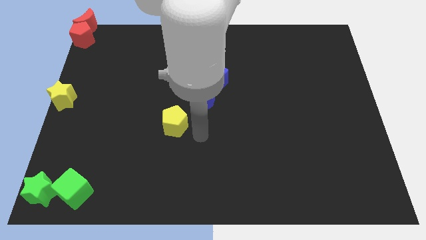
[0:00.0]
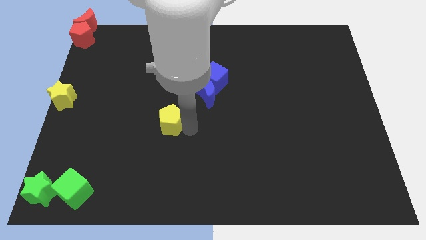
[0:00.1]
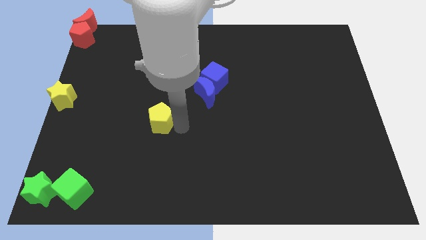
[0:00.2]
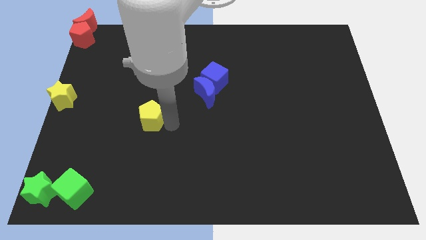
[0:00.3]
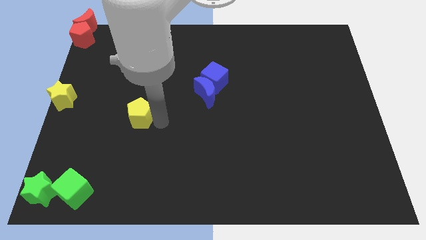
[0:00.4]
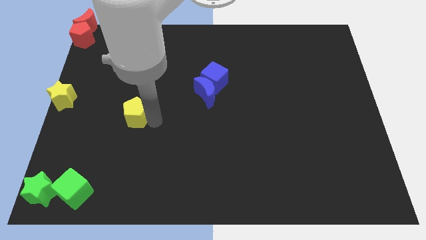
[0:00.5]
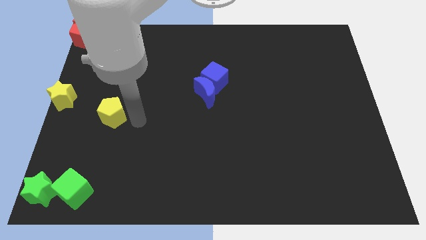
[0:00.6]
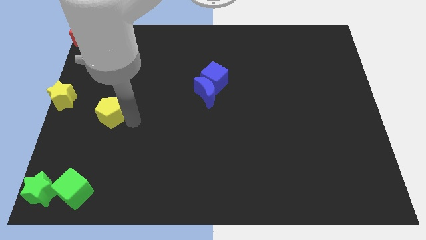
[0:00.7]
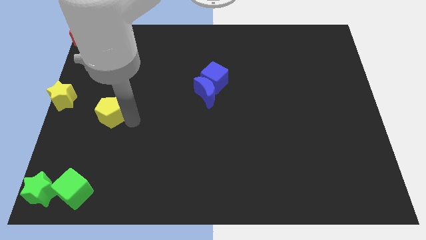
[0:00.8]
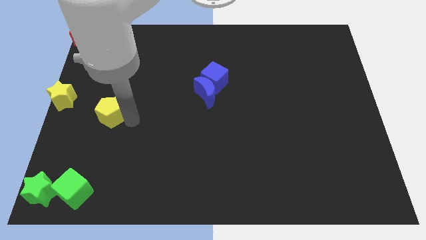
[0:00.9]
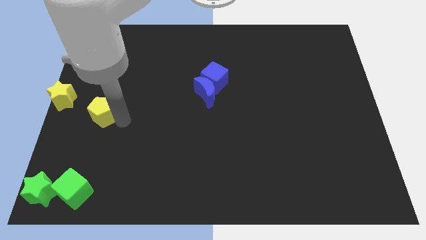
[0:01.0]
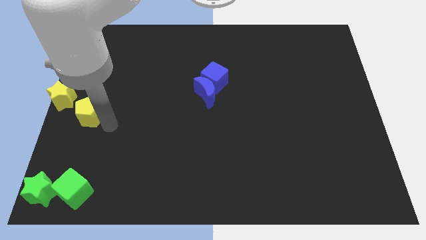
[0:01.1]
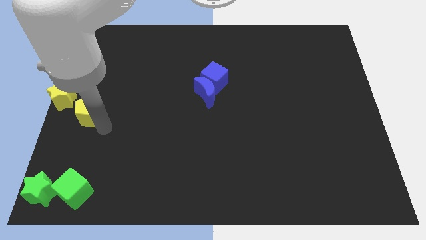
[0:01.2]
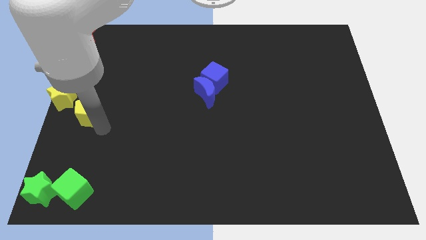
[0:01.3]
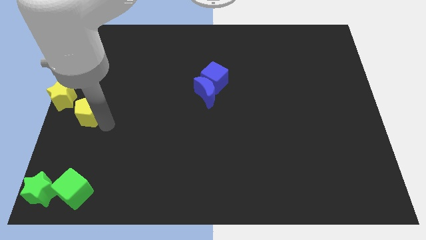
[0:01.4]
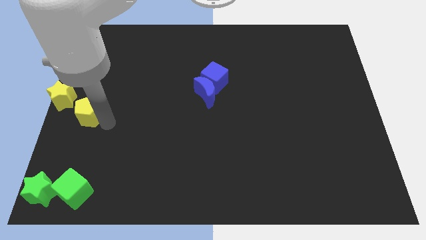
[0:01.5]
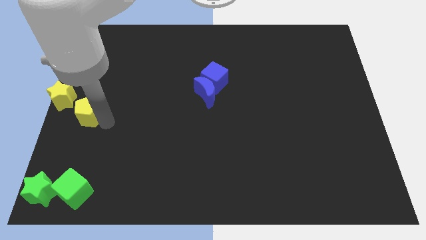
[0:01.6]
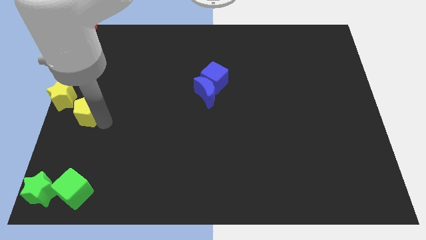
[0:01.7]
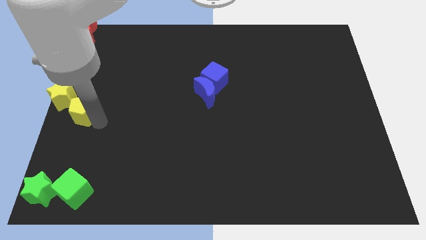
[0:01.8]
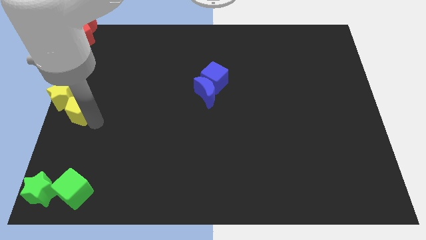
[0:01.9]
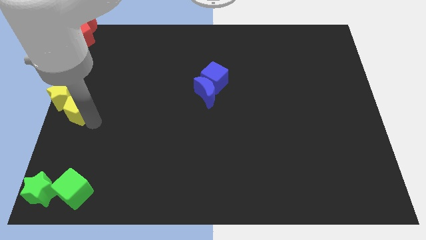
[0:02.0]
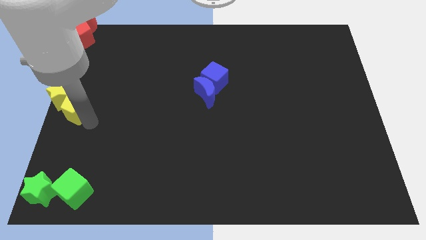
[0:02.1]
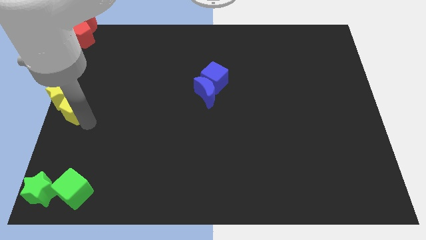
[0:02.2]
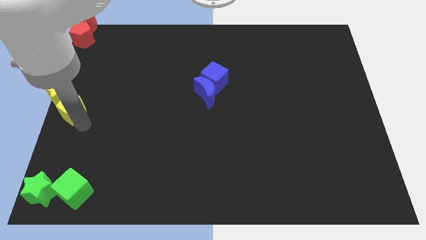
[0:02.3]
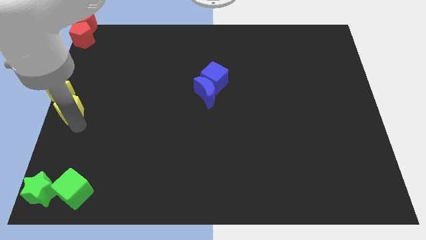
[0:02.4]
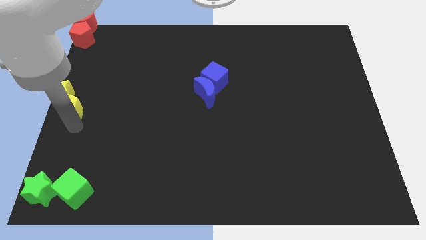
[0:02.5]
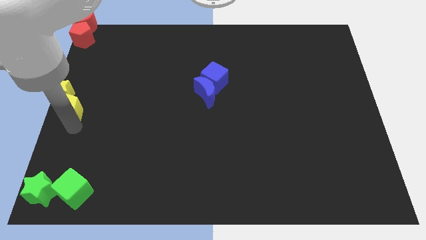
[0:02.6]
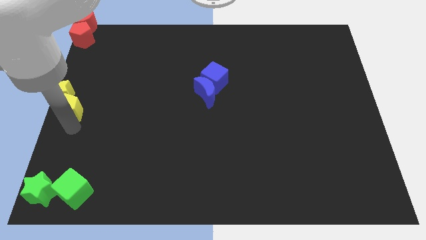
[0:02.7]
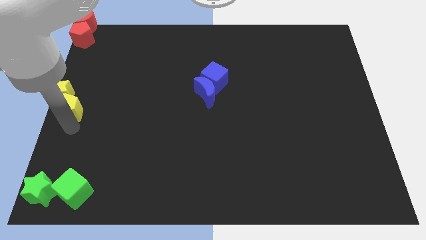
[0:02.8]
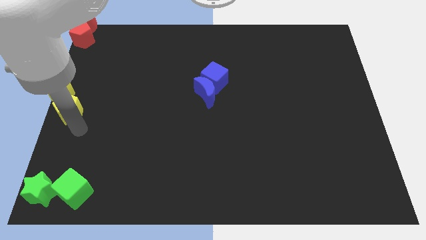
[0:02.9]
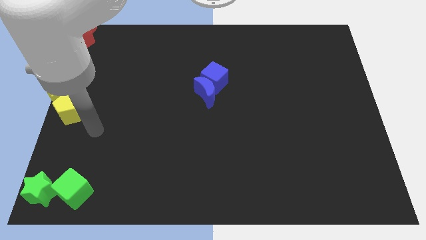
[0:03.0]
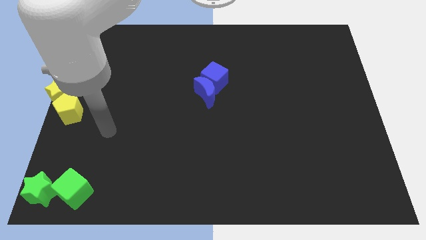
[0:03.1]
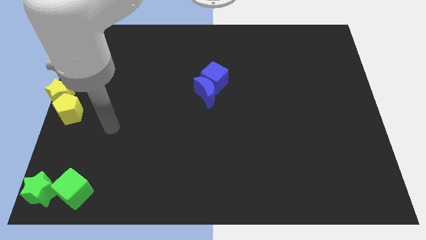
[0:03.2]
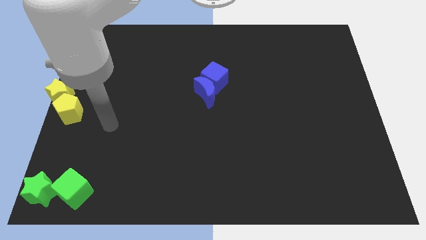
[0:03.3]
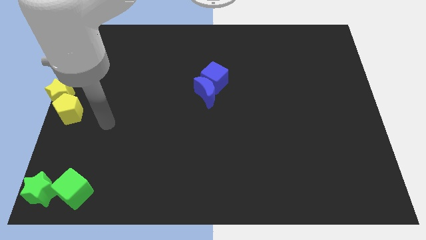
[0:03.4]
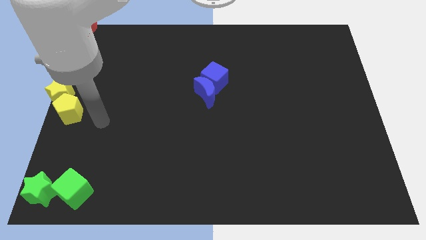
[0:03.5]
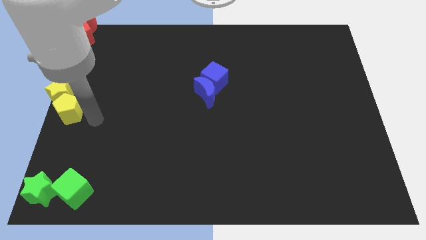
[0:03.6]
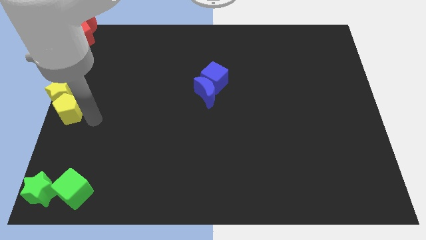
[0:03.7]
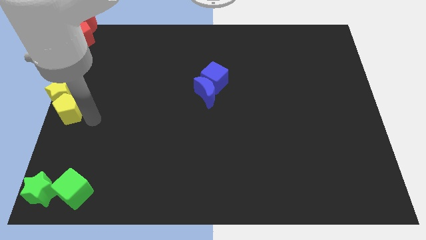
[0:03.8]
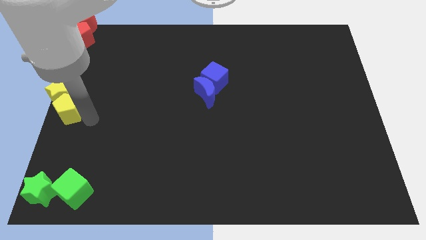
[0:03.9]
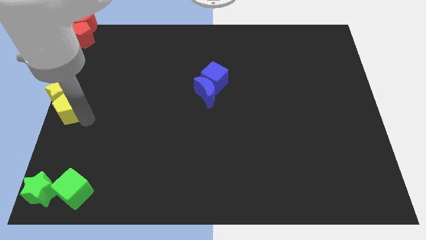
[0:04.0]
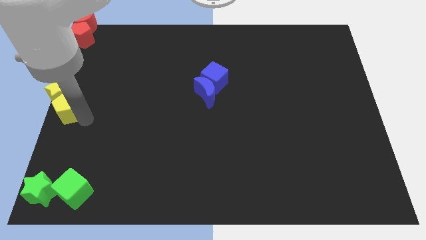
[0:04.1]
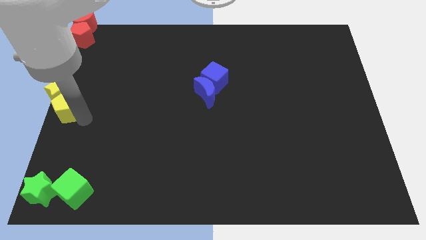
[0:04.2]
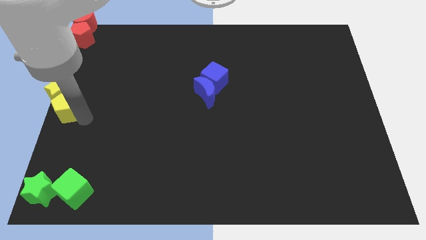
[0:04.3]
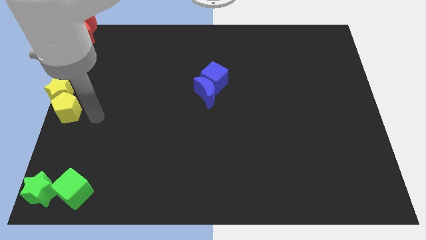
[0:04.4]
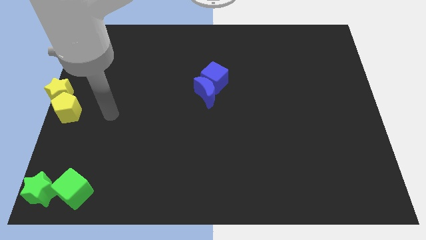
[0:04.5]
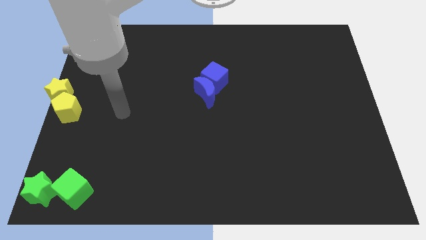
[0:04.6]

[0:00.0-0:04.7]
slide the yellow pentagon into the bottom side of the yellow star

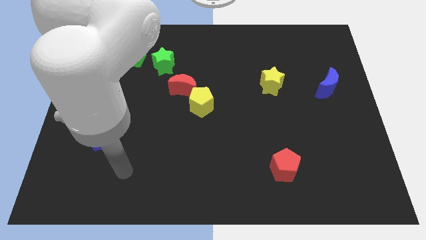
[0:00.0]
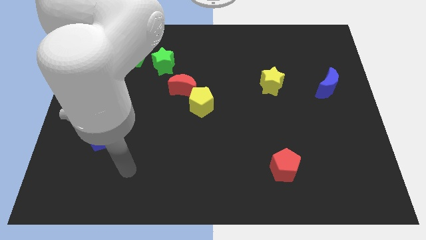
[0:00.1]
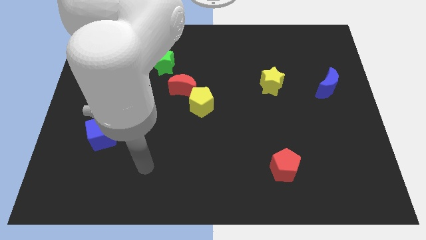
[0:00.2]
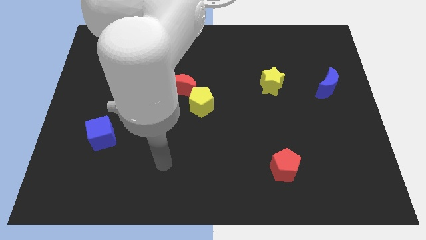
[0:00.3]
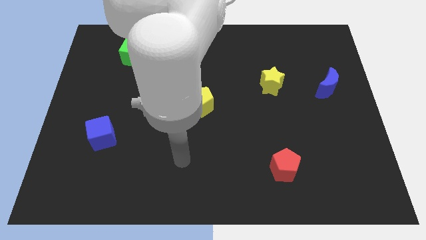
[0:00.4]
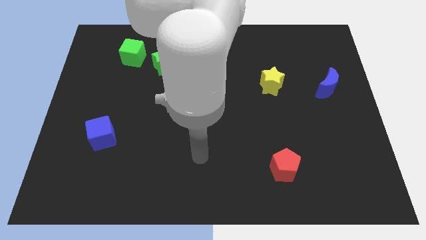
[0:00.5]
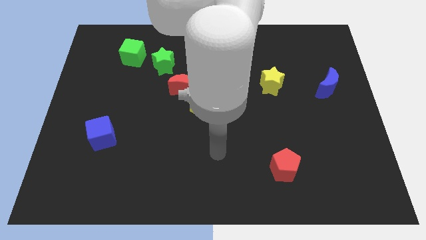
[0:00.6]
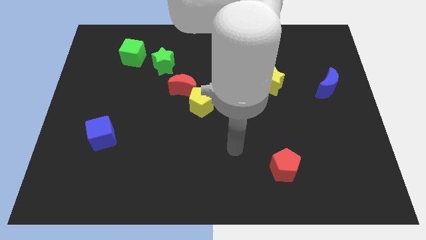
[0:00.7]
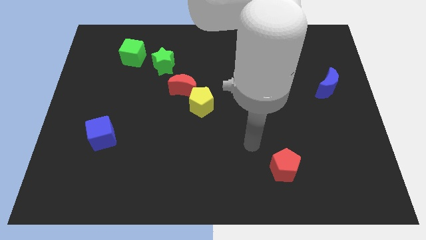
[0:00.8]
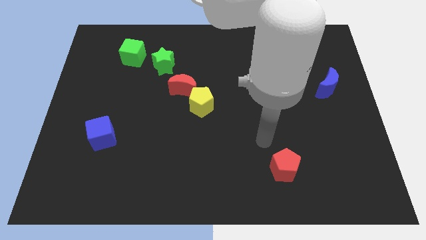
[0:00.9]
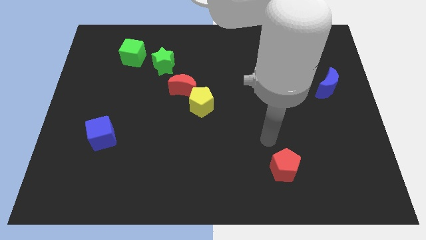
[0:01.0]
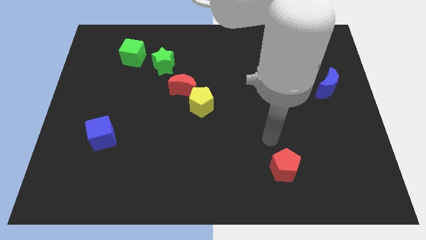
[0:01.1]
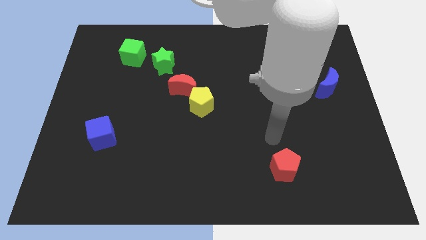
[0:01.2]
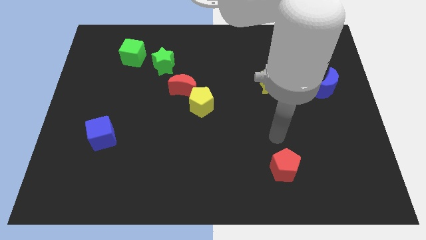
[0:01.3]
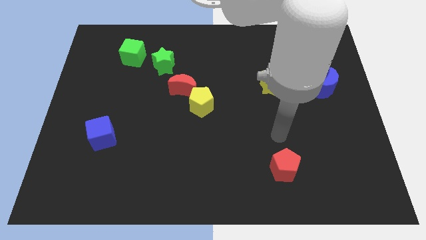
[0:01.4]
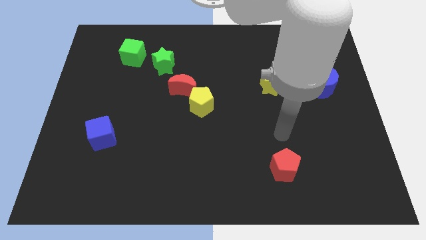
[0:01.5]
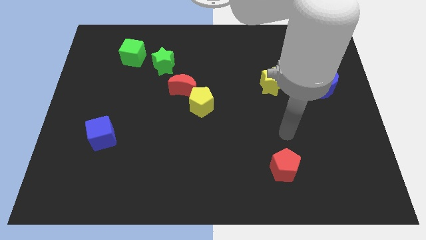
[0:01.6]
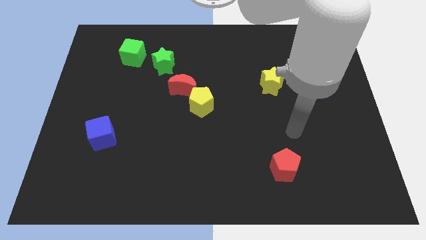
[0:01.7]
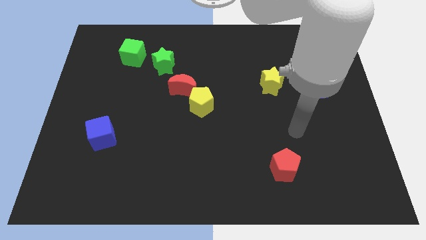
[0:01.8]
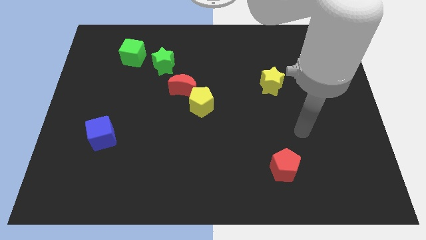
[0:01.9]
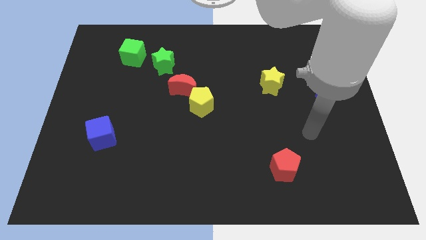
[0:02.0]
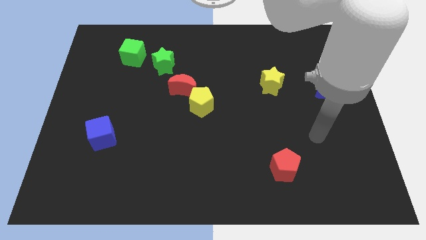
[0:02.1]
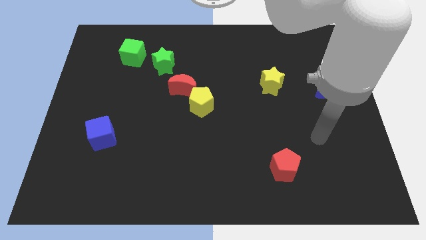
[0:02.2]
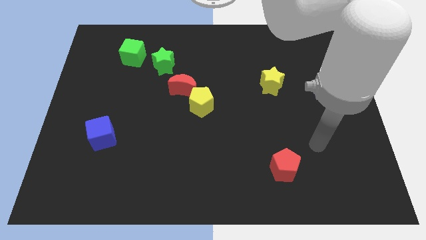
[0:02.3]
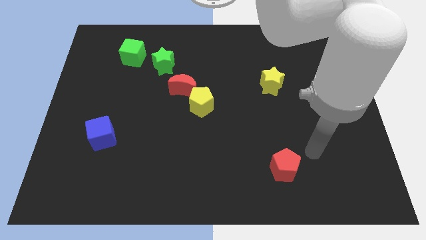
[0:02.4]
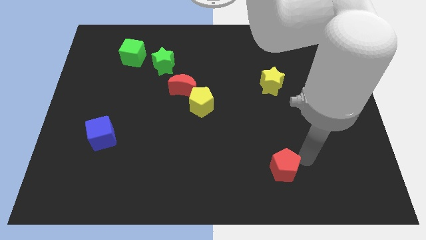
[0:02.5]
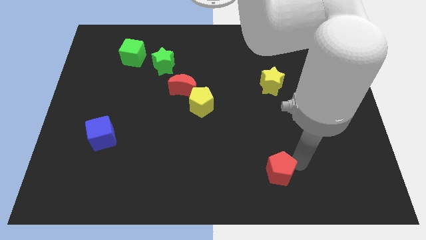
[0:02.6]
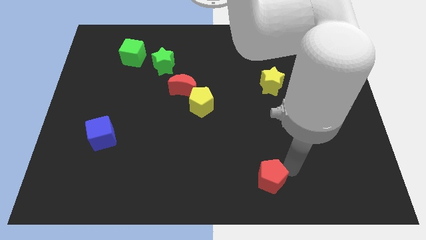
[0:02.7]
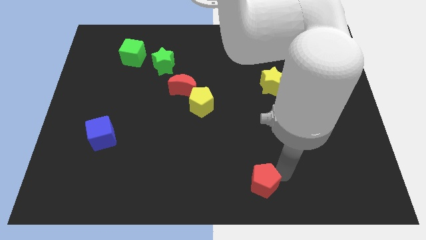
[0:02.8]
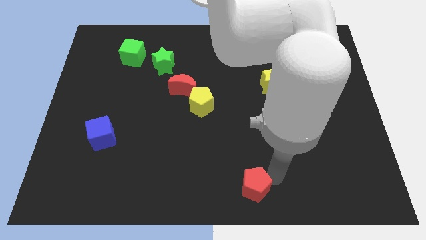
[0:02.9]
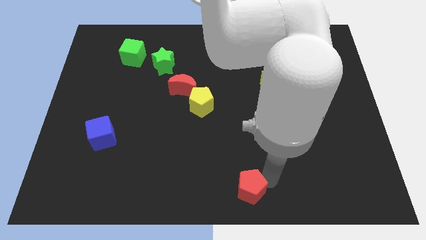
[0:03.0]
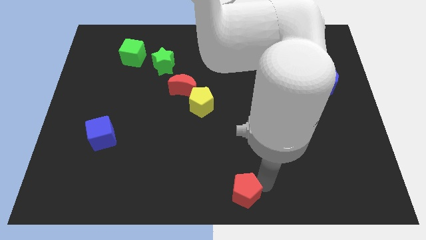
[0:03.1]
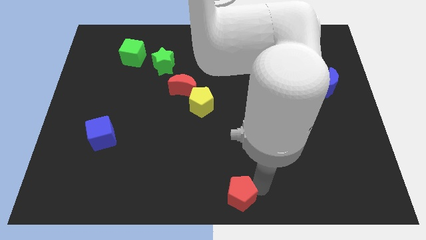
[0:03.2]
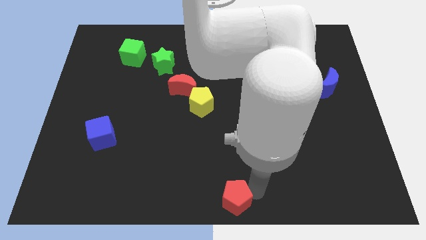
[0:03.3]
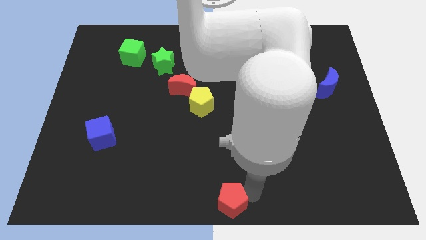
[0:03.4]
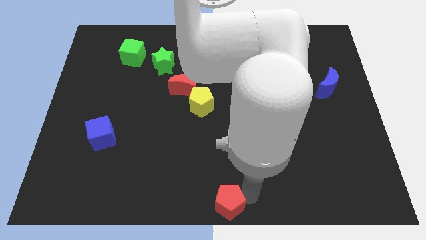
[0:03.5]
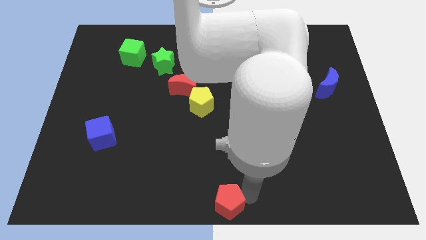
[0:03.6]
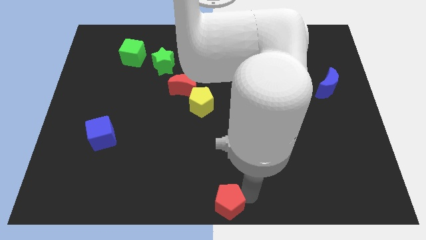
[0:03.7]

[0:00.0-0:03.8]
put the red pentagon at the bottom center of the board

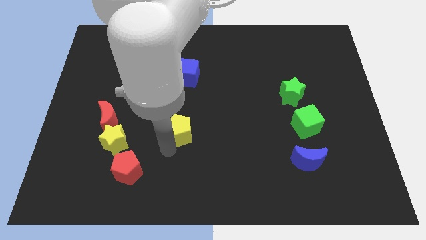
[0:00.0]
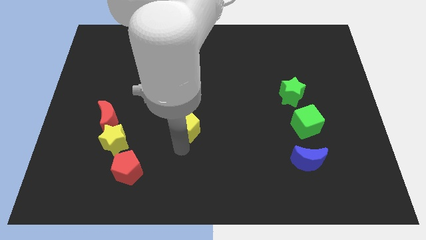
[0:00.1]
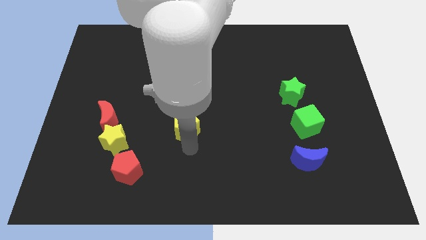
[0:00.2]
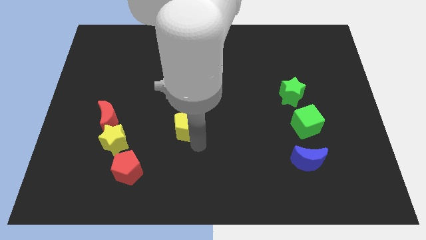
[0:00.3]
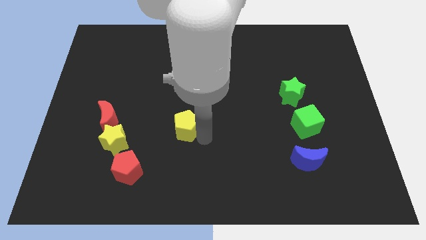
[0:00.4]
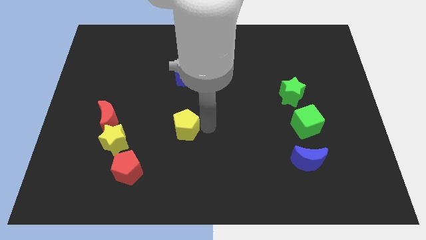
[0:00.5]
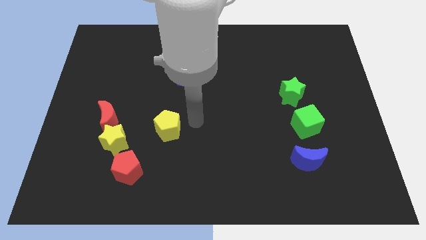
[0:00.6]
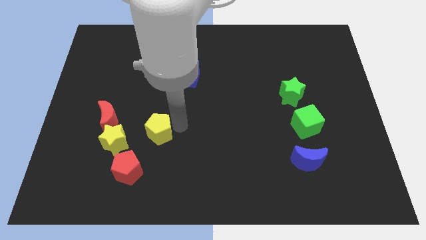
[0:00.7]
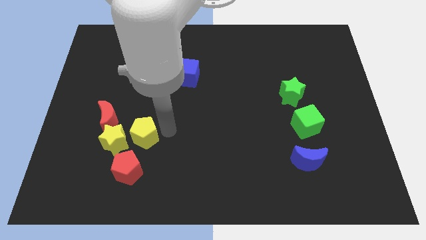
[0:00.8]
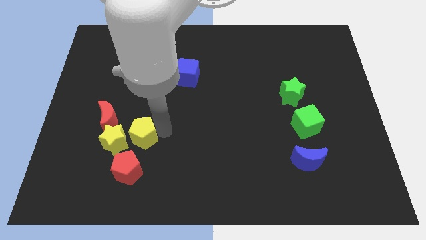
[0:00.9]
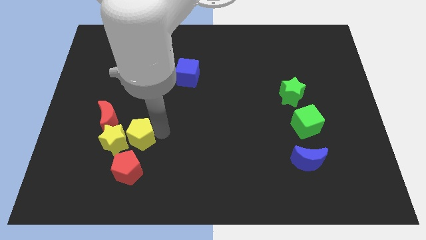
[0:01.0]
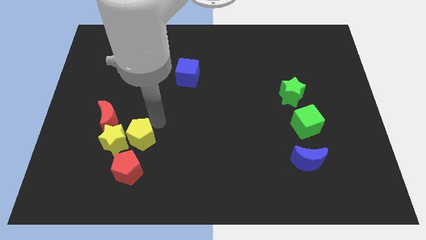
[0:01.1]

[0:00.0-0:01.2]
move the yellow pentagon towards the yellow star
